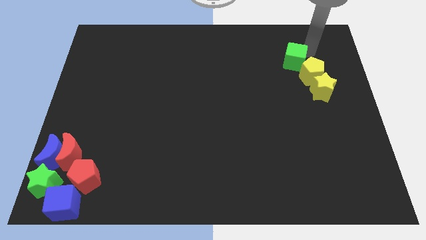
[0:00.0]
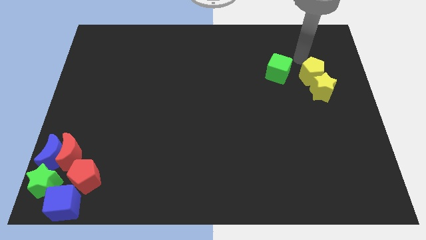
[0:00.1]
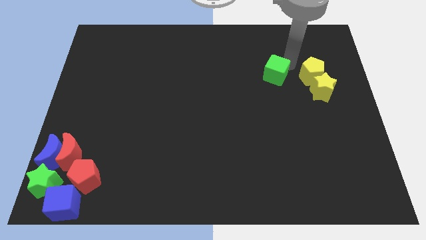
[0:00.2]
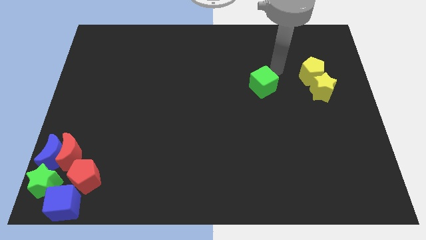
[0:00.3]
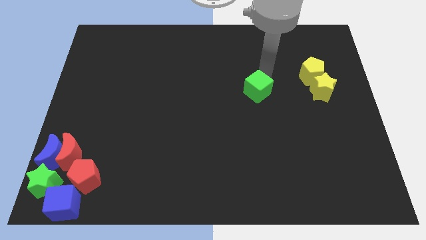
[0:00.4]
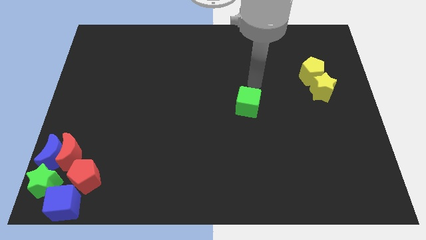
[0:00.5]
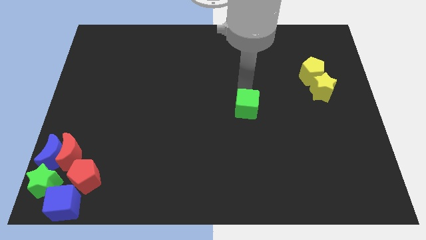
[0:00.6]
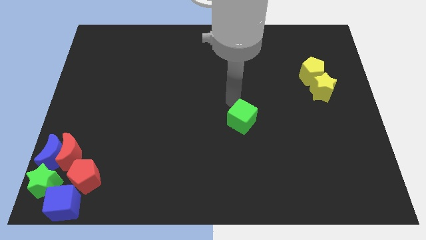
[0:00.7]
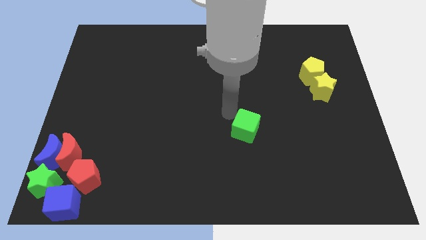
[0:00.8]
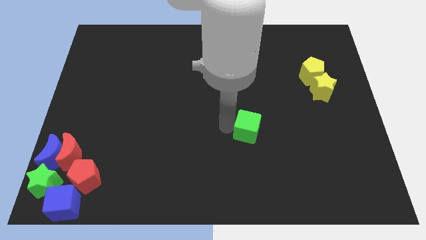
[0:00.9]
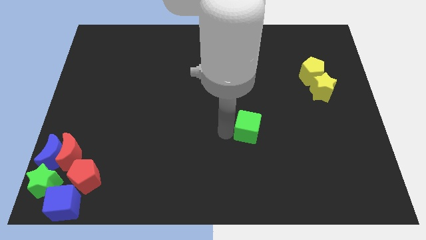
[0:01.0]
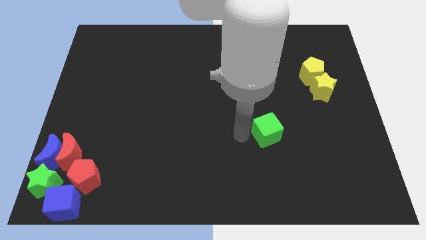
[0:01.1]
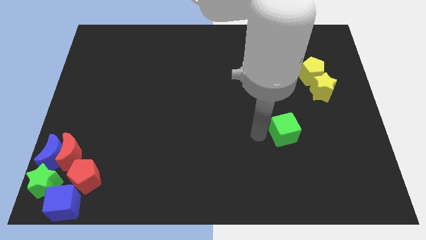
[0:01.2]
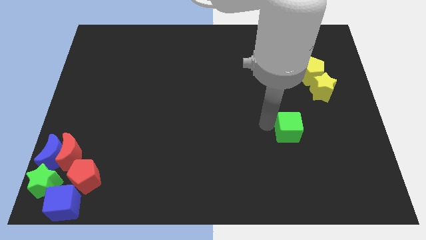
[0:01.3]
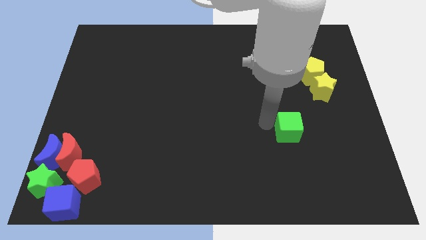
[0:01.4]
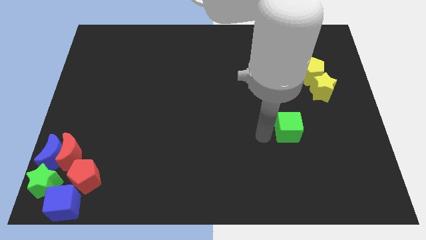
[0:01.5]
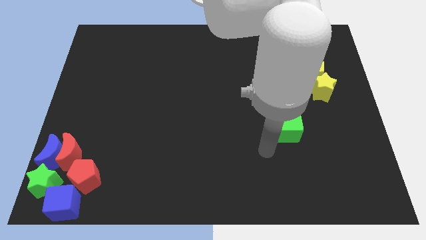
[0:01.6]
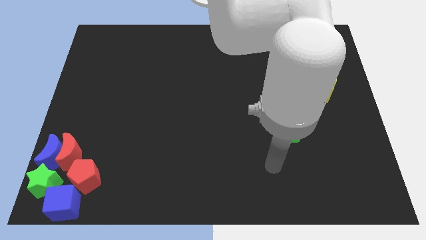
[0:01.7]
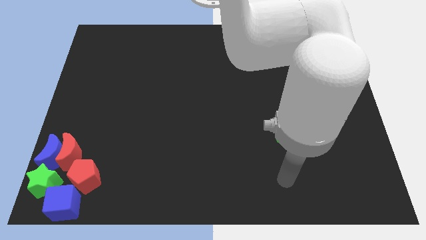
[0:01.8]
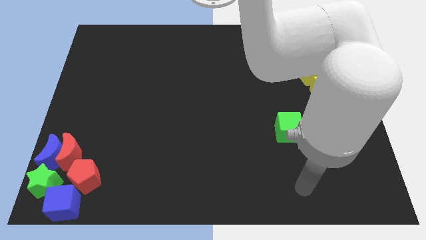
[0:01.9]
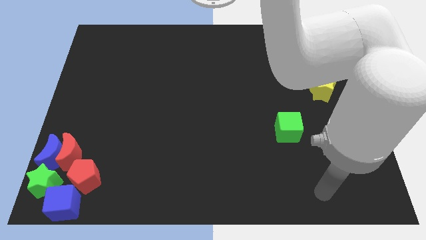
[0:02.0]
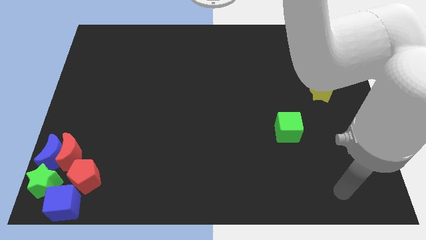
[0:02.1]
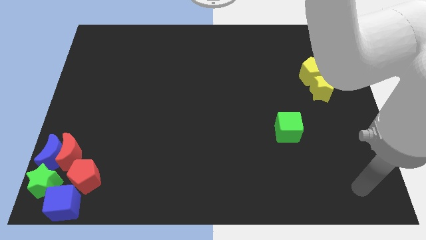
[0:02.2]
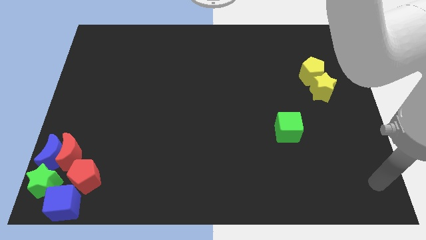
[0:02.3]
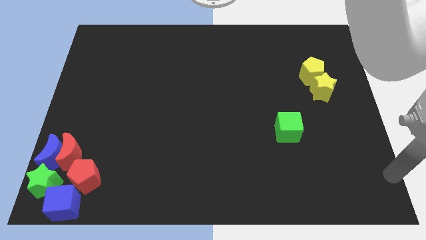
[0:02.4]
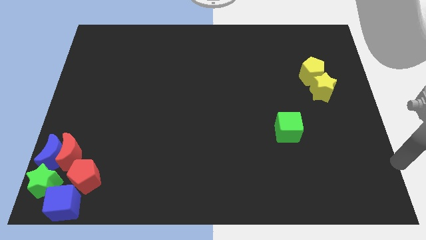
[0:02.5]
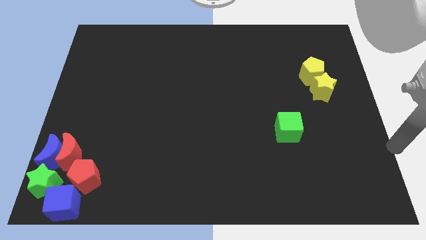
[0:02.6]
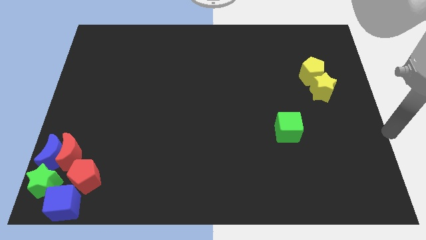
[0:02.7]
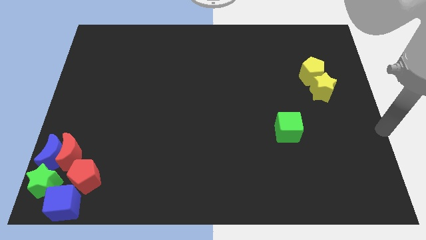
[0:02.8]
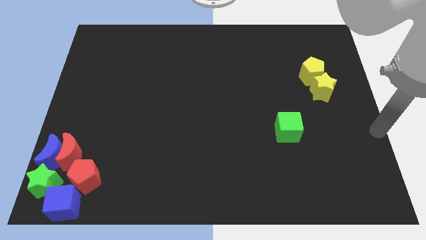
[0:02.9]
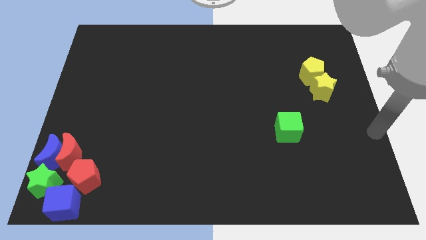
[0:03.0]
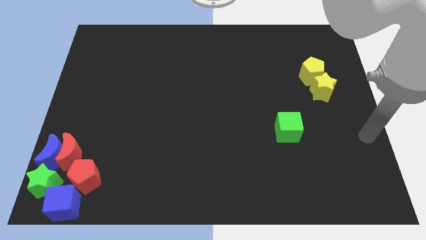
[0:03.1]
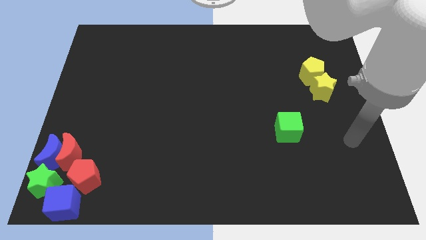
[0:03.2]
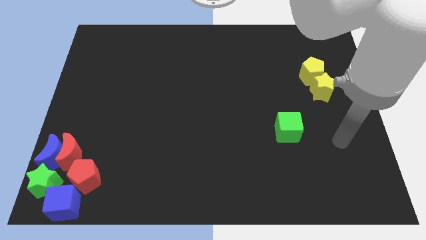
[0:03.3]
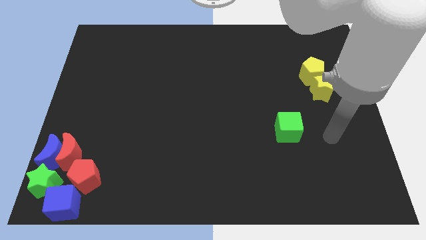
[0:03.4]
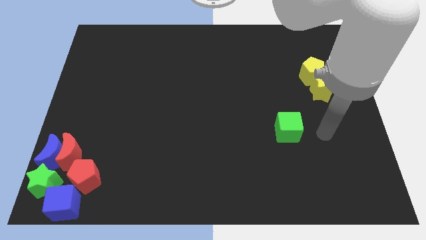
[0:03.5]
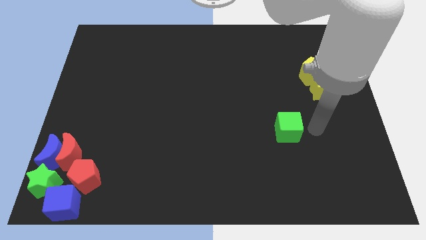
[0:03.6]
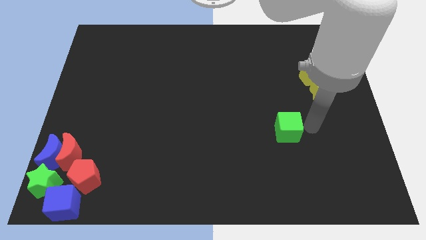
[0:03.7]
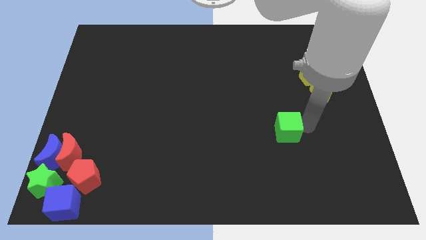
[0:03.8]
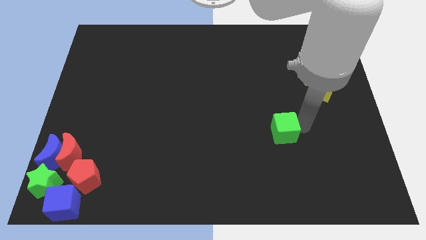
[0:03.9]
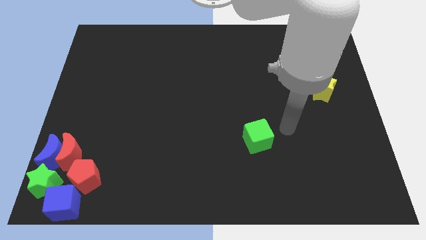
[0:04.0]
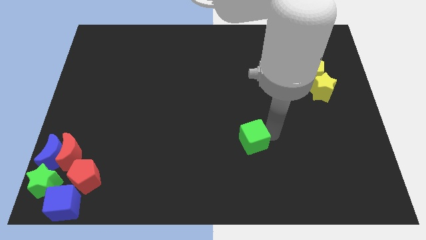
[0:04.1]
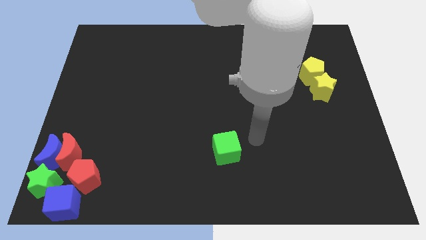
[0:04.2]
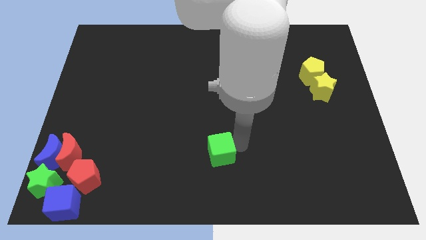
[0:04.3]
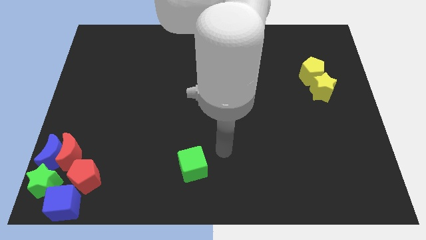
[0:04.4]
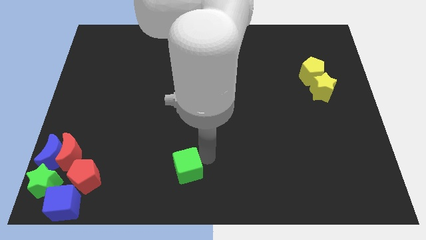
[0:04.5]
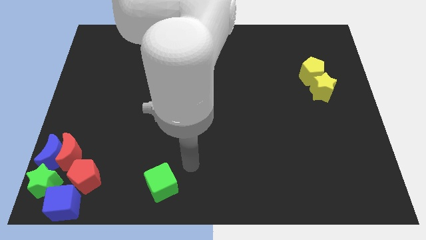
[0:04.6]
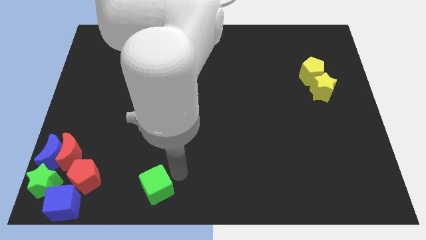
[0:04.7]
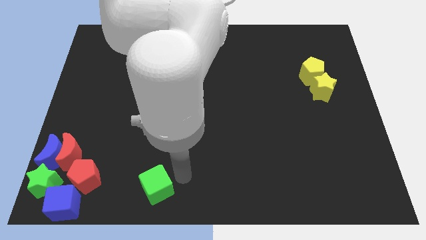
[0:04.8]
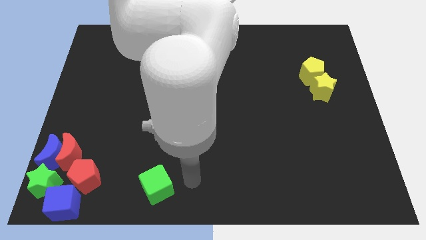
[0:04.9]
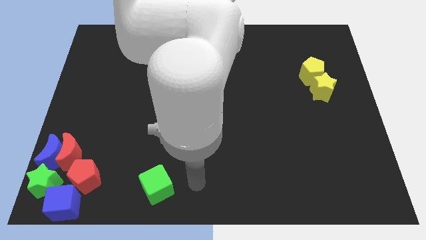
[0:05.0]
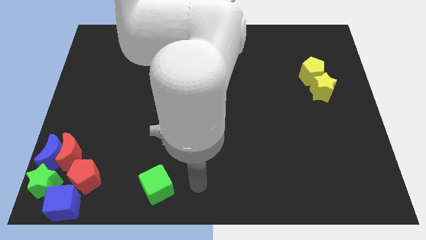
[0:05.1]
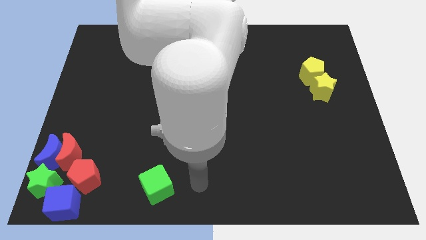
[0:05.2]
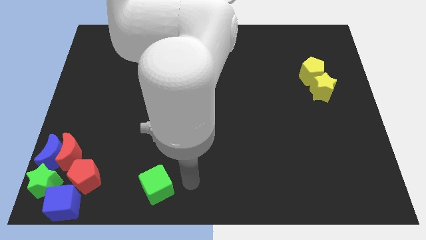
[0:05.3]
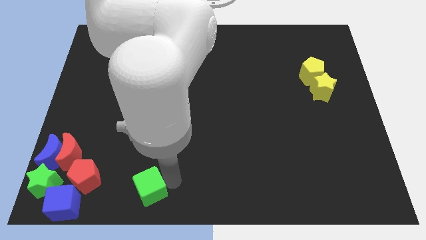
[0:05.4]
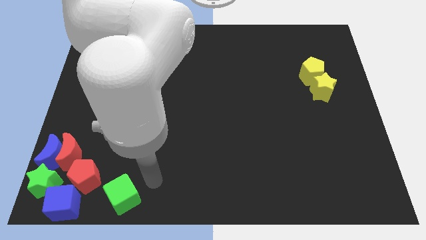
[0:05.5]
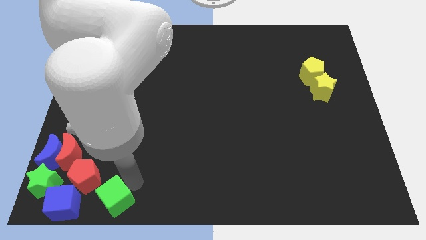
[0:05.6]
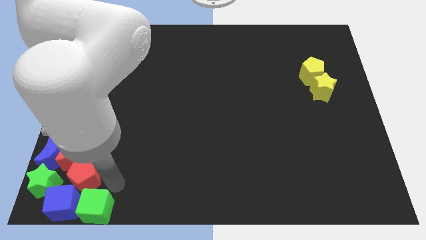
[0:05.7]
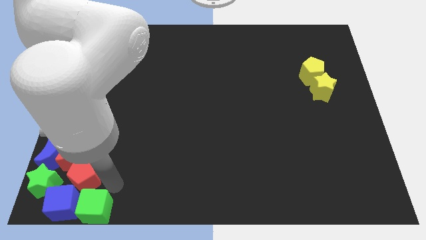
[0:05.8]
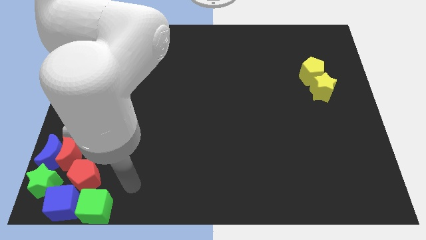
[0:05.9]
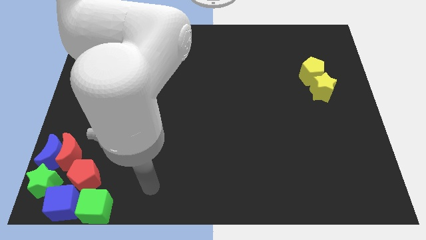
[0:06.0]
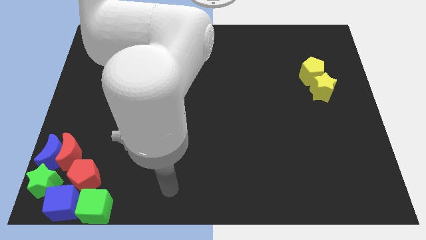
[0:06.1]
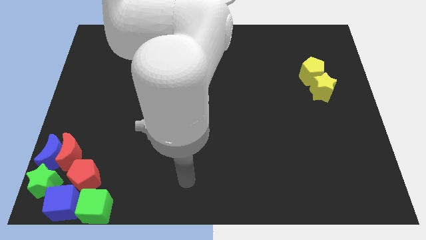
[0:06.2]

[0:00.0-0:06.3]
push the green cube close to the blue cube

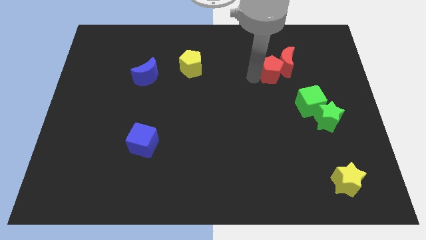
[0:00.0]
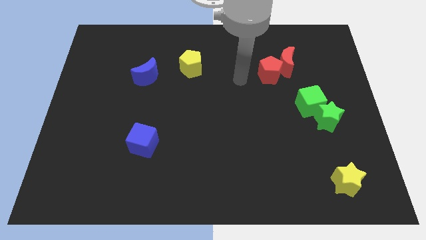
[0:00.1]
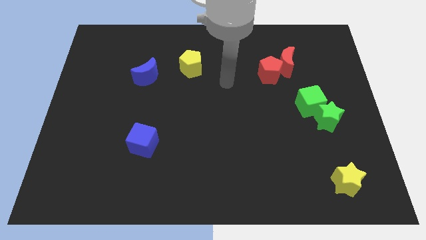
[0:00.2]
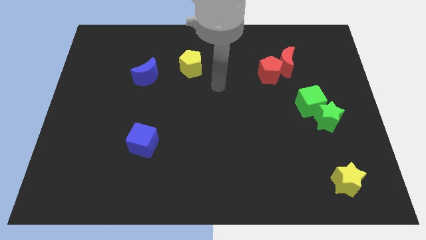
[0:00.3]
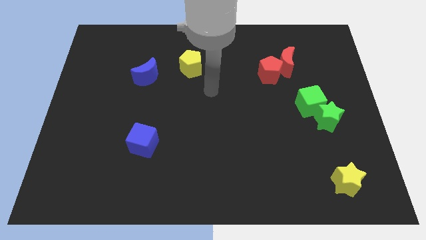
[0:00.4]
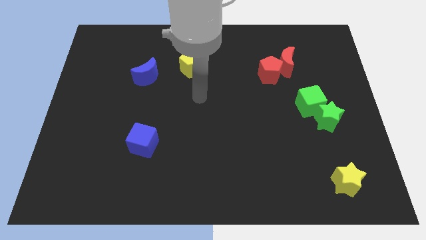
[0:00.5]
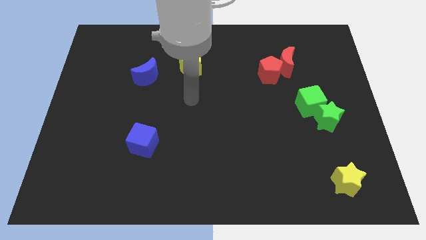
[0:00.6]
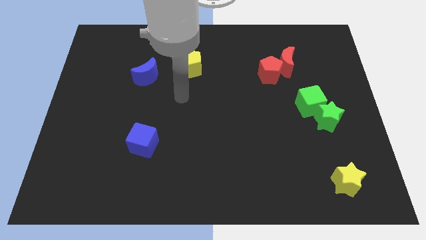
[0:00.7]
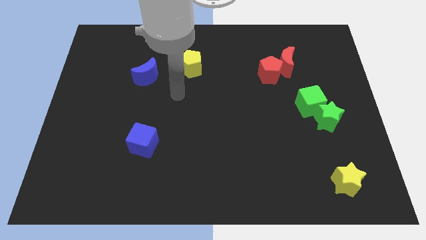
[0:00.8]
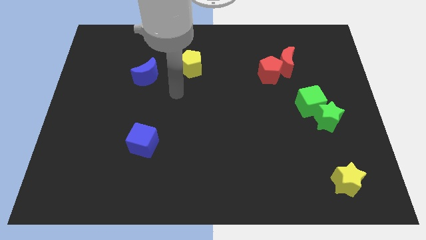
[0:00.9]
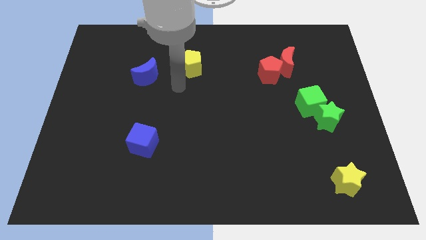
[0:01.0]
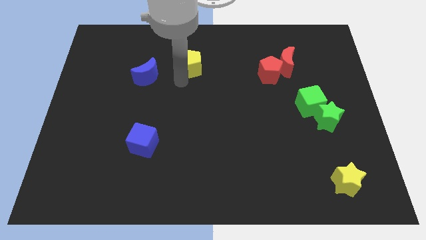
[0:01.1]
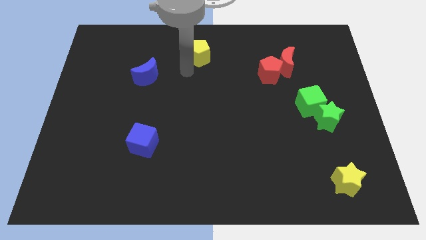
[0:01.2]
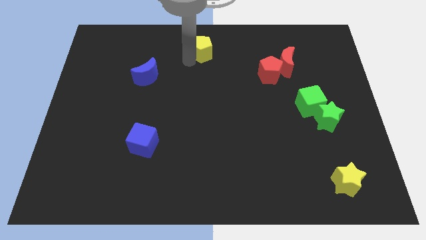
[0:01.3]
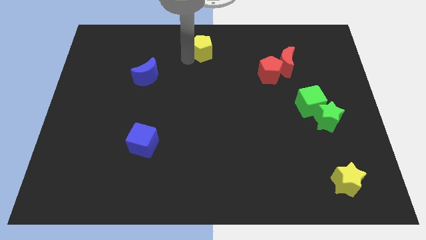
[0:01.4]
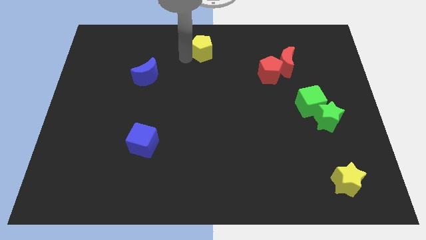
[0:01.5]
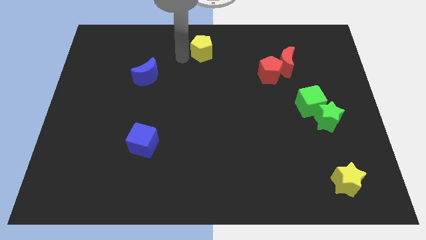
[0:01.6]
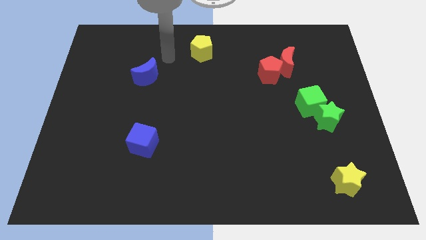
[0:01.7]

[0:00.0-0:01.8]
move the yellow pentagon slightly to the top

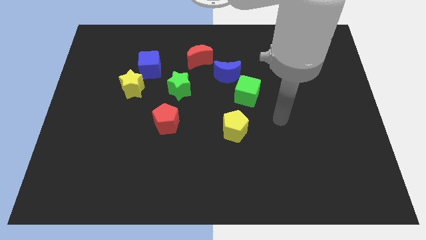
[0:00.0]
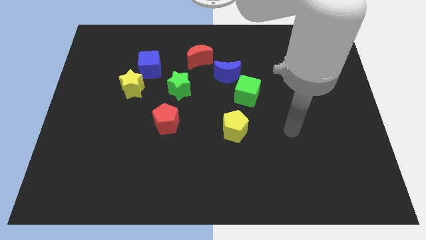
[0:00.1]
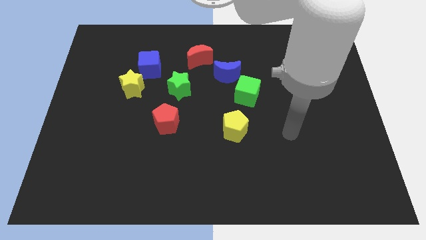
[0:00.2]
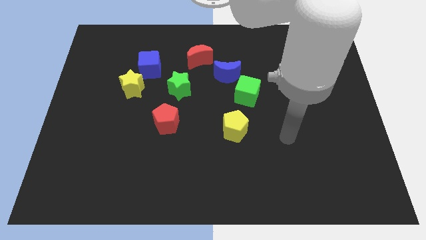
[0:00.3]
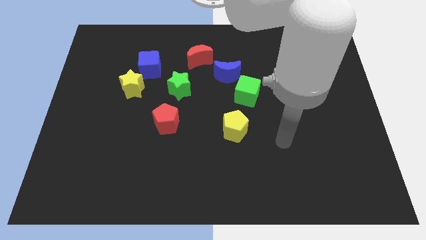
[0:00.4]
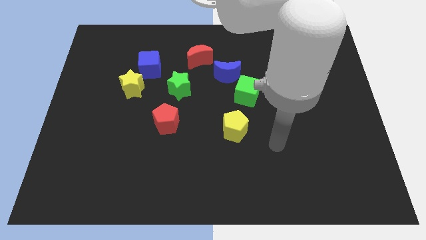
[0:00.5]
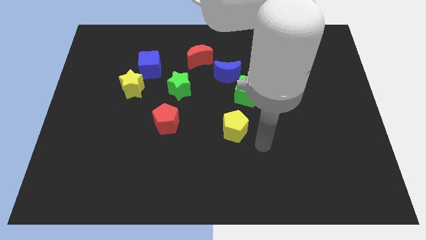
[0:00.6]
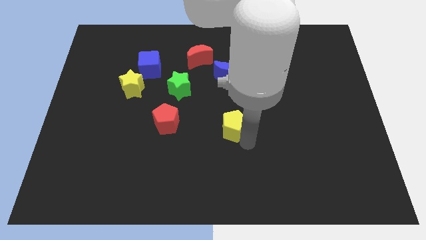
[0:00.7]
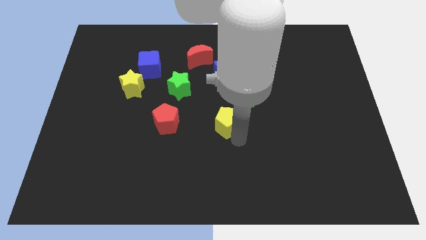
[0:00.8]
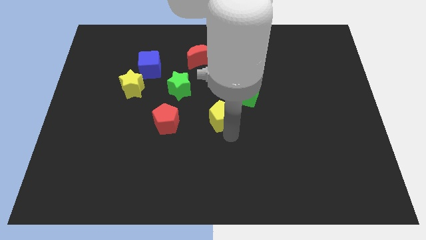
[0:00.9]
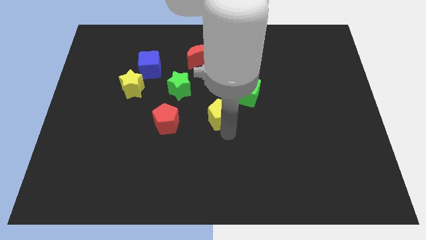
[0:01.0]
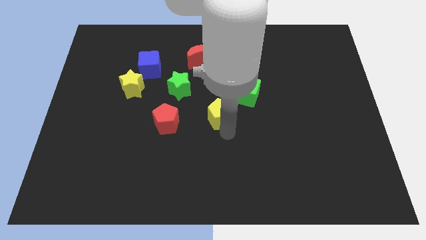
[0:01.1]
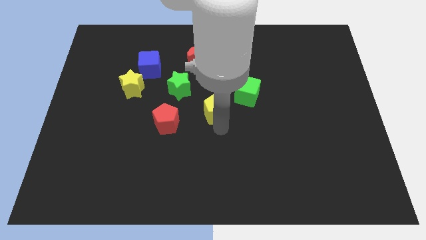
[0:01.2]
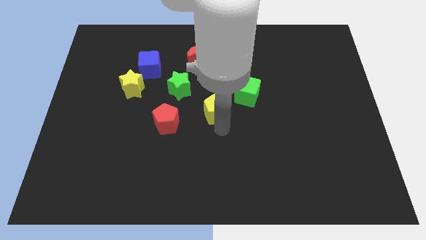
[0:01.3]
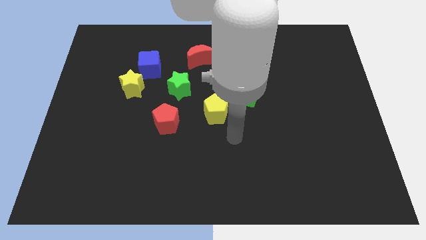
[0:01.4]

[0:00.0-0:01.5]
push the yellow pentagon diagonally to the green cube
